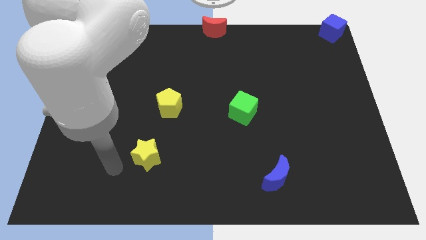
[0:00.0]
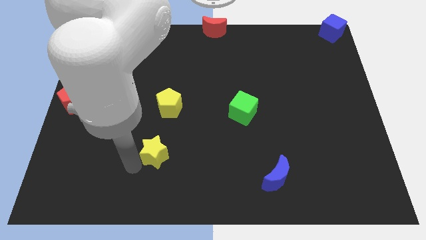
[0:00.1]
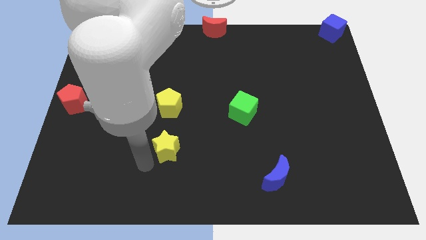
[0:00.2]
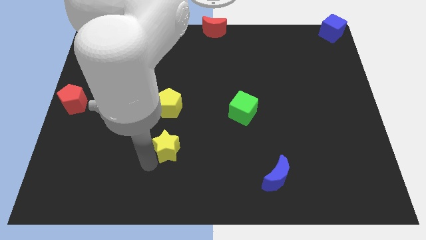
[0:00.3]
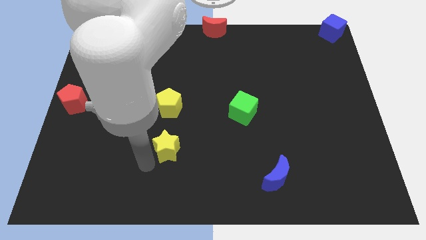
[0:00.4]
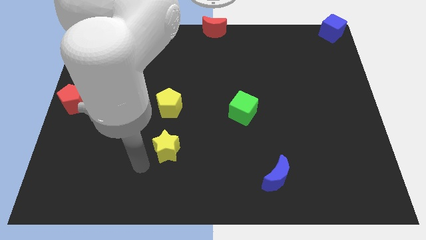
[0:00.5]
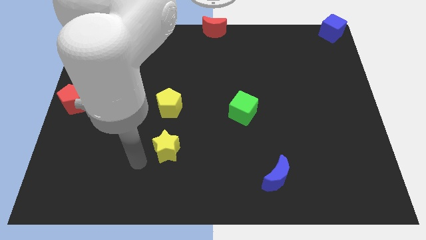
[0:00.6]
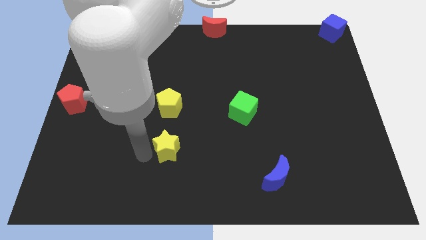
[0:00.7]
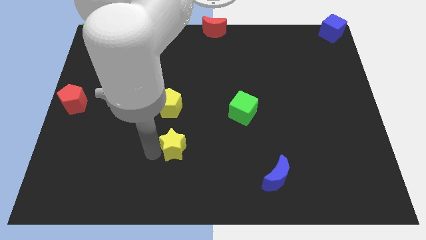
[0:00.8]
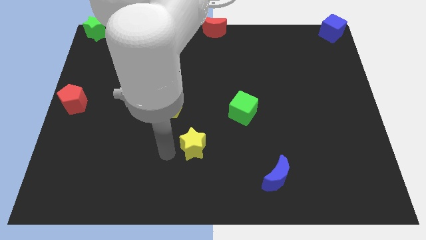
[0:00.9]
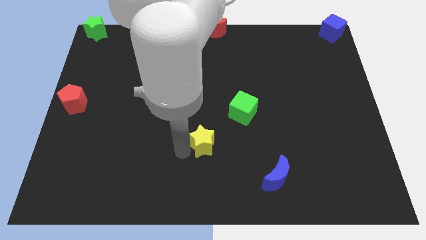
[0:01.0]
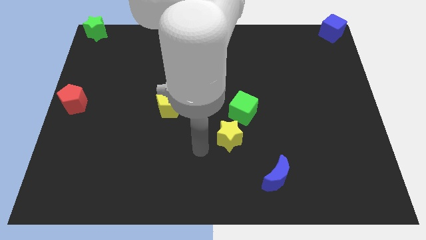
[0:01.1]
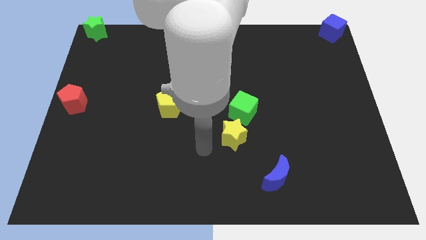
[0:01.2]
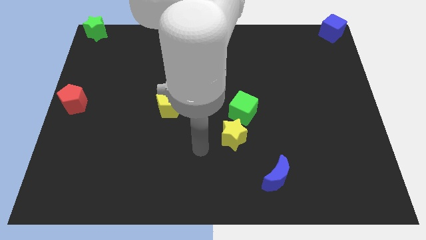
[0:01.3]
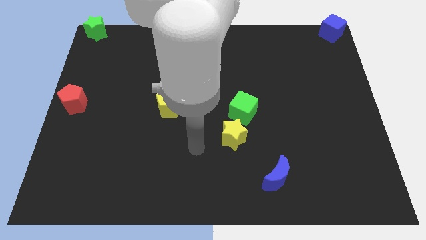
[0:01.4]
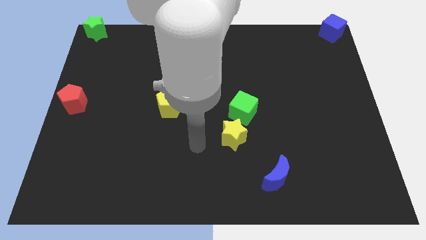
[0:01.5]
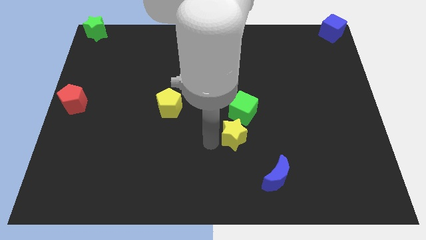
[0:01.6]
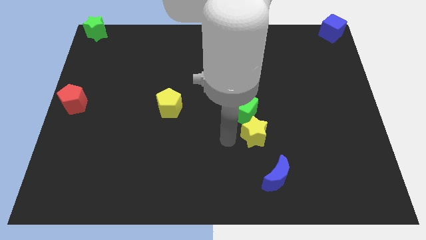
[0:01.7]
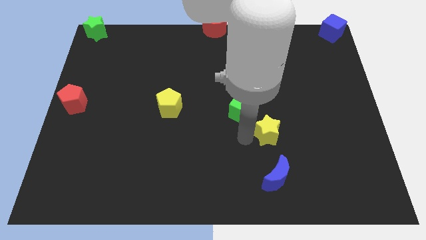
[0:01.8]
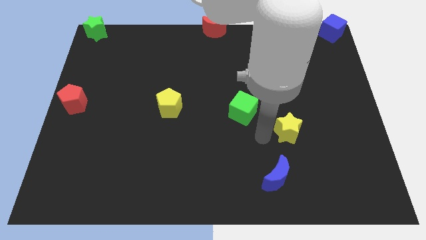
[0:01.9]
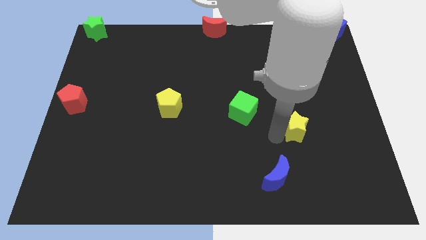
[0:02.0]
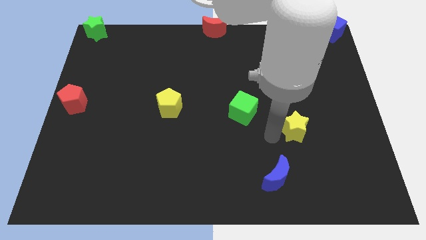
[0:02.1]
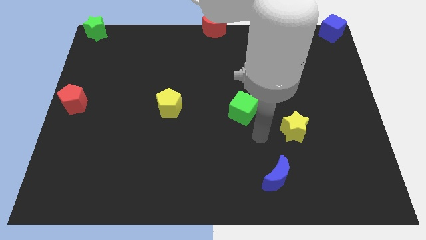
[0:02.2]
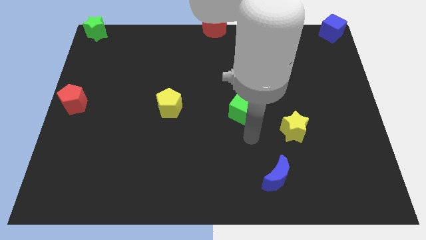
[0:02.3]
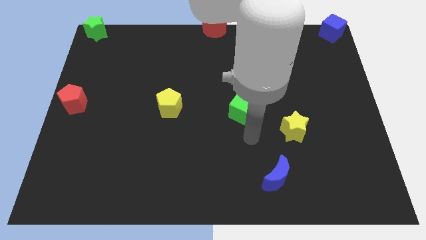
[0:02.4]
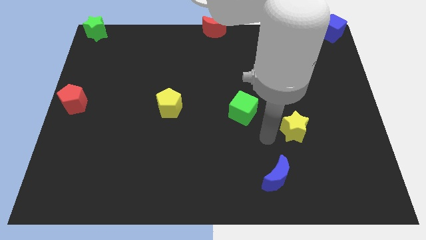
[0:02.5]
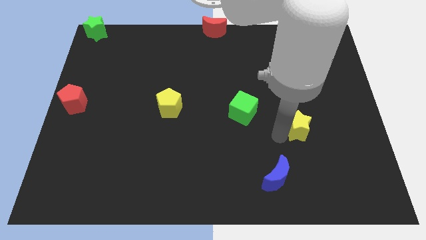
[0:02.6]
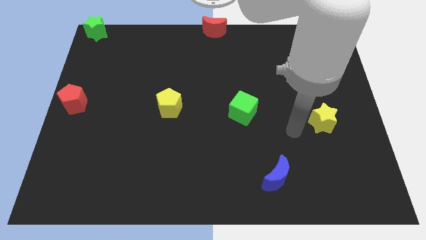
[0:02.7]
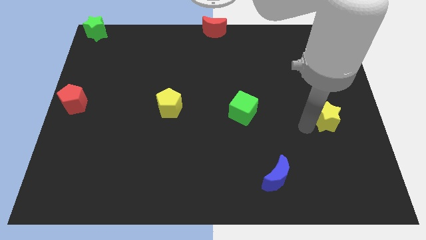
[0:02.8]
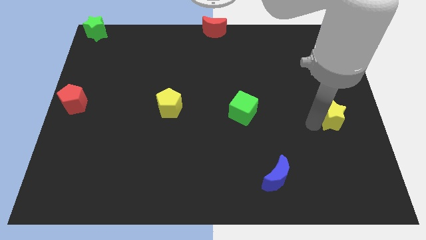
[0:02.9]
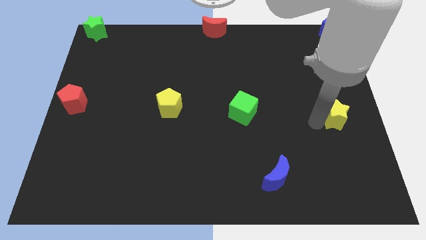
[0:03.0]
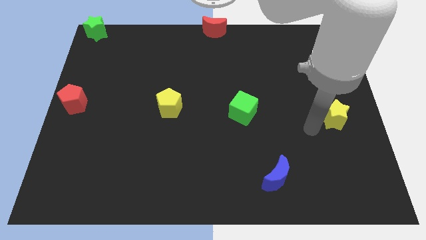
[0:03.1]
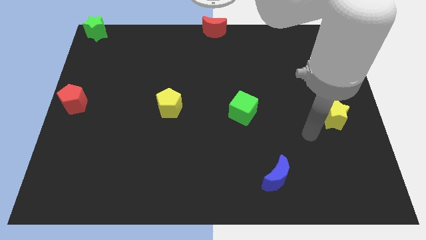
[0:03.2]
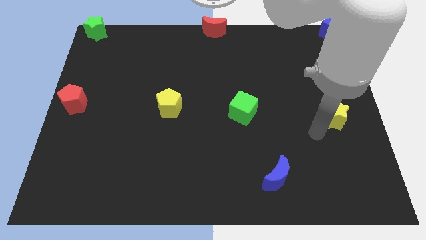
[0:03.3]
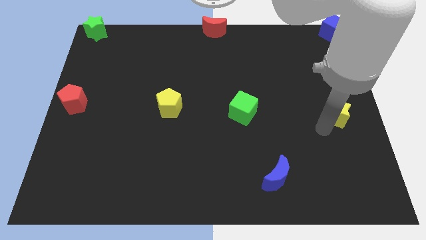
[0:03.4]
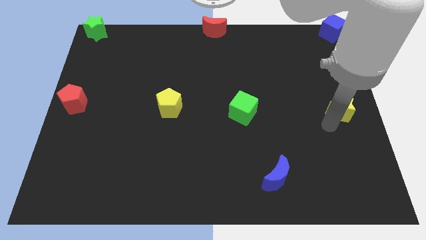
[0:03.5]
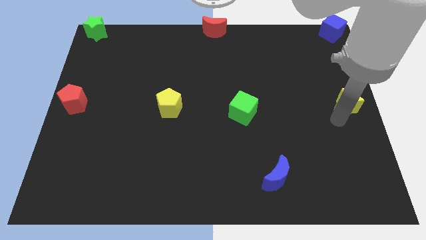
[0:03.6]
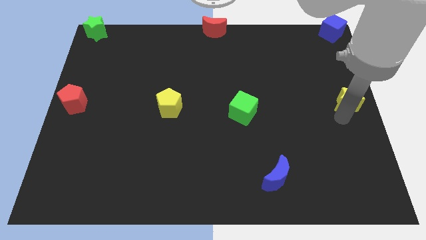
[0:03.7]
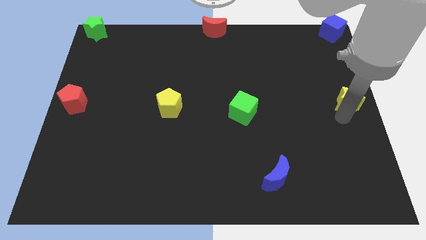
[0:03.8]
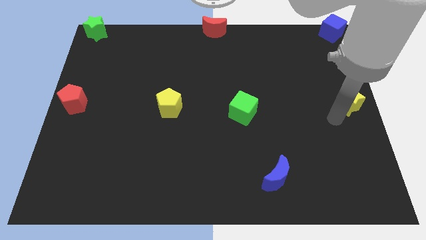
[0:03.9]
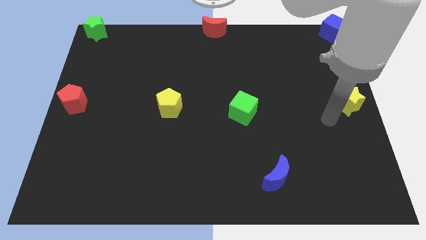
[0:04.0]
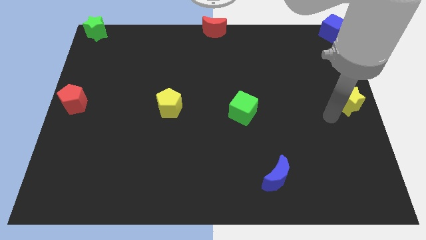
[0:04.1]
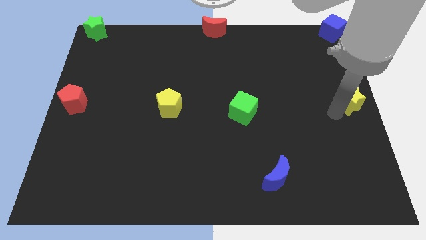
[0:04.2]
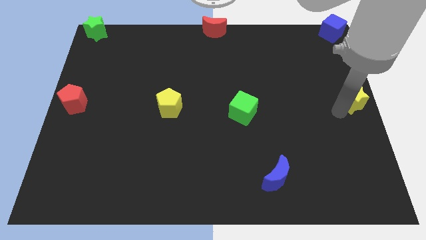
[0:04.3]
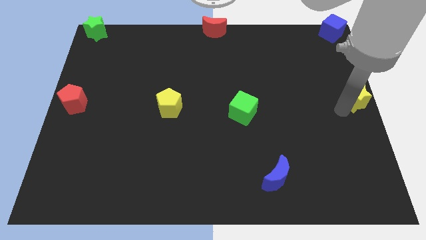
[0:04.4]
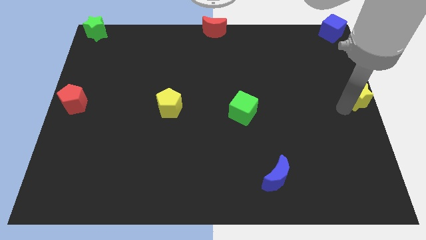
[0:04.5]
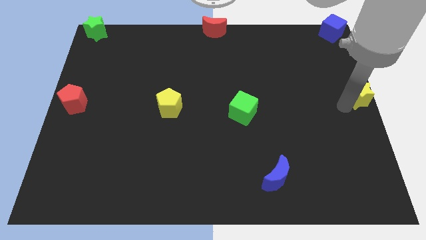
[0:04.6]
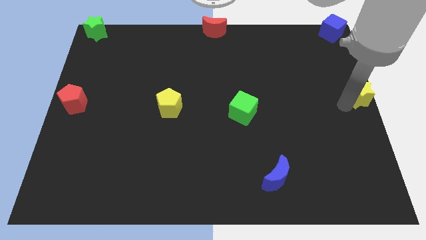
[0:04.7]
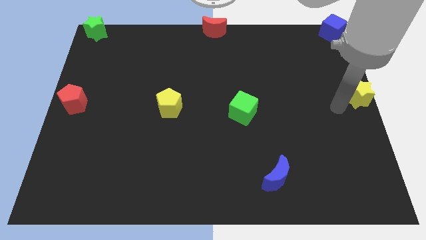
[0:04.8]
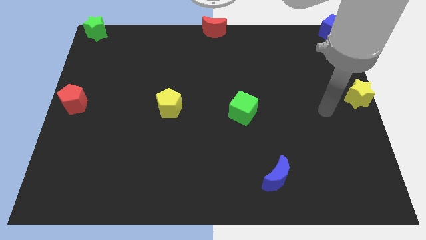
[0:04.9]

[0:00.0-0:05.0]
move the yellow star to the right center of the board

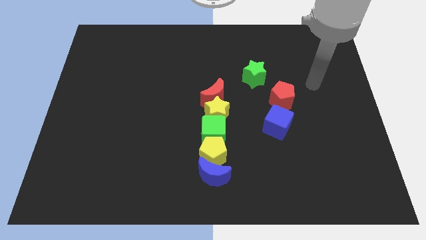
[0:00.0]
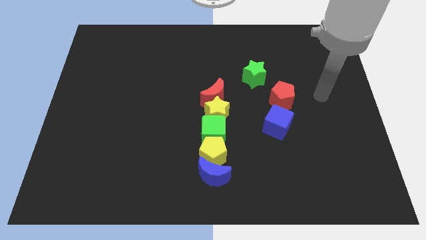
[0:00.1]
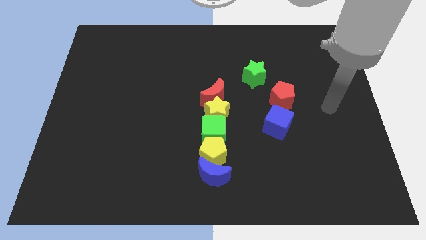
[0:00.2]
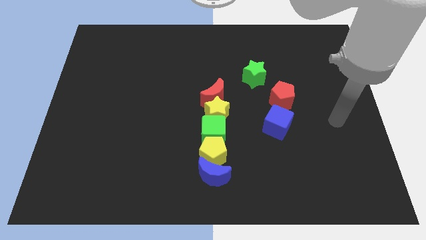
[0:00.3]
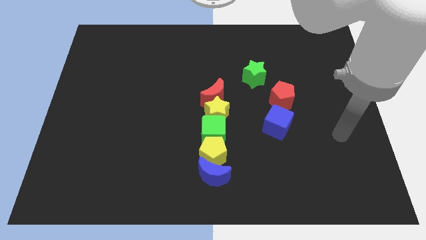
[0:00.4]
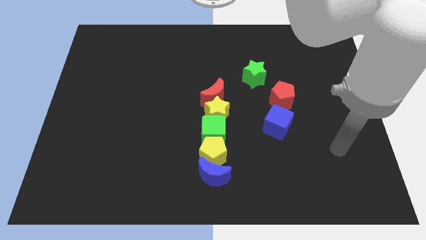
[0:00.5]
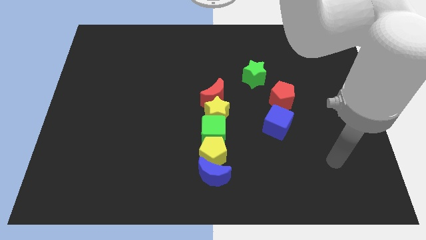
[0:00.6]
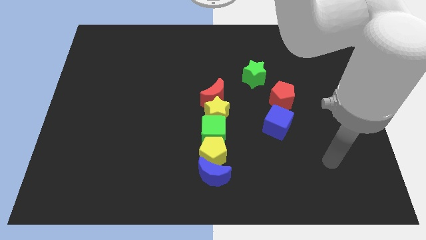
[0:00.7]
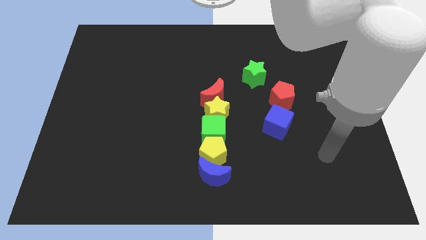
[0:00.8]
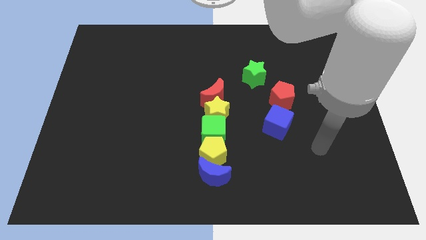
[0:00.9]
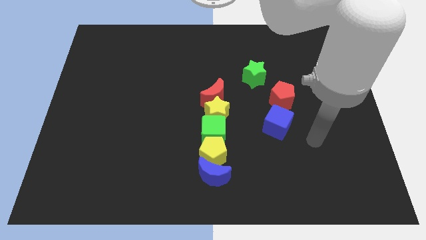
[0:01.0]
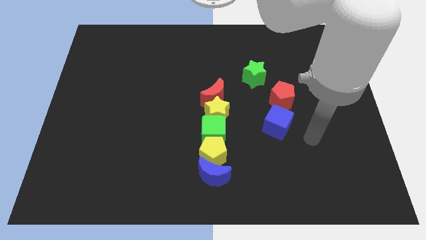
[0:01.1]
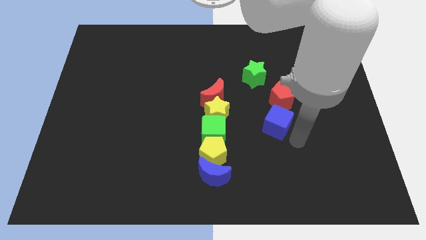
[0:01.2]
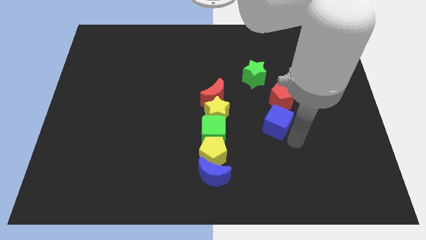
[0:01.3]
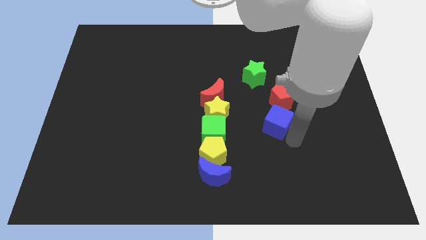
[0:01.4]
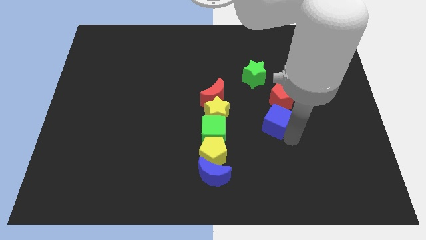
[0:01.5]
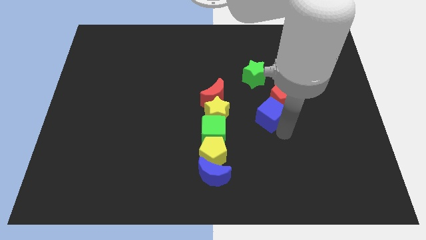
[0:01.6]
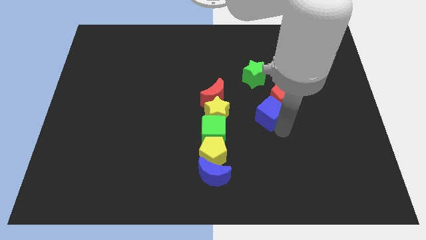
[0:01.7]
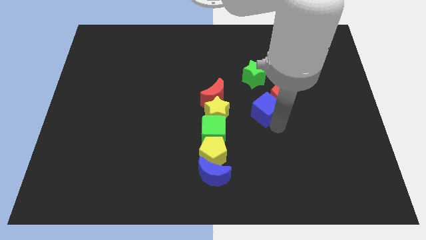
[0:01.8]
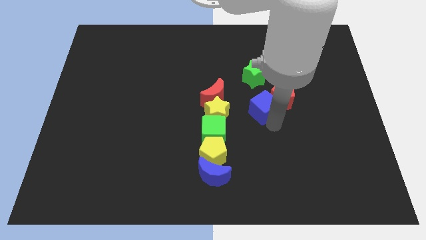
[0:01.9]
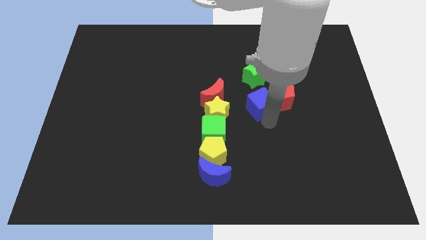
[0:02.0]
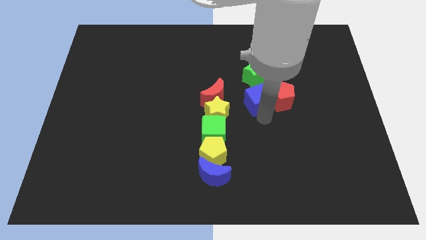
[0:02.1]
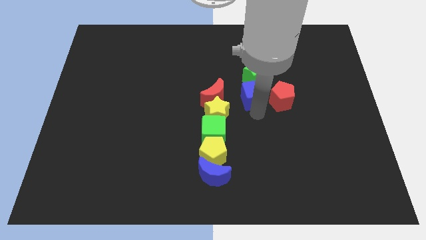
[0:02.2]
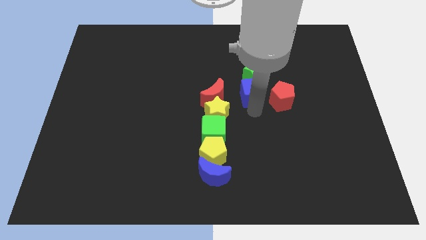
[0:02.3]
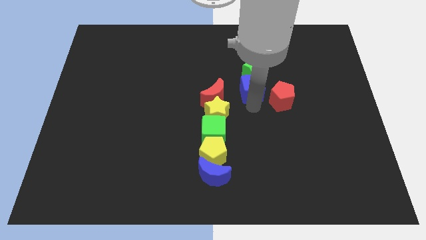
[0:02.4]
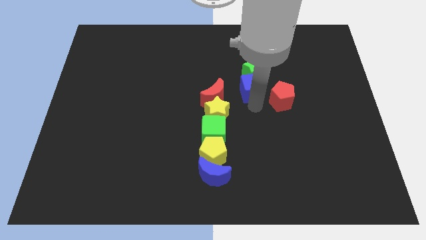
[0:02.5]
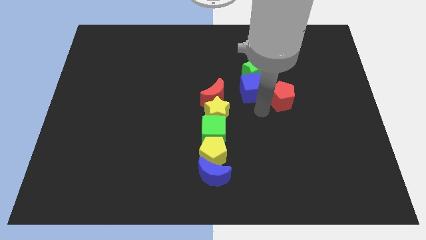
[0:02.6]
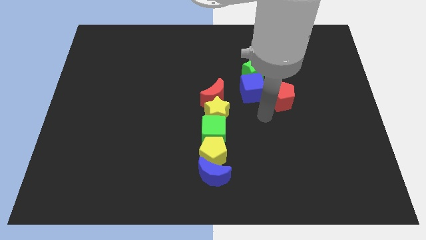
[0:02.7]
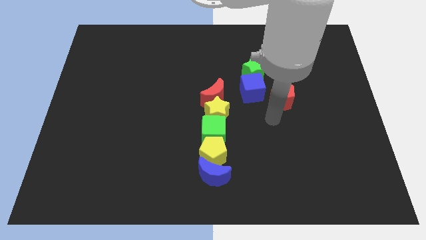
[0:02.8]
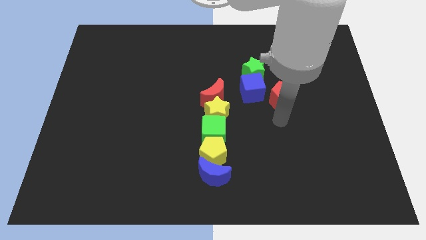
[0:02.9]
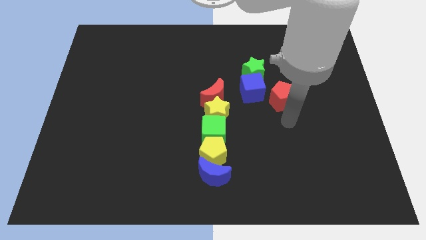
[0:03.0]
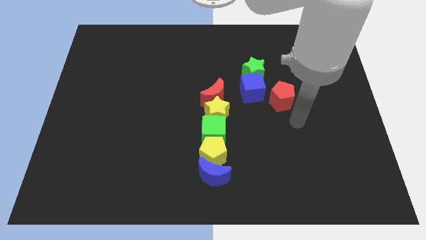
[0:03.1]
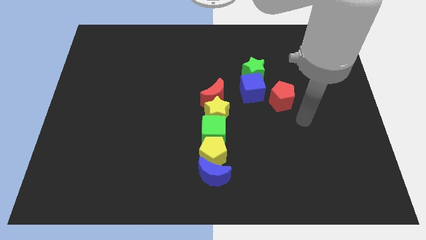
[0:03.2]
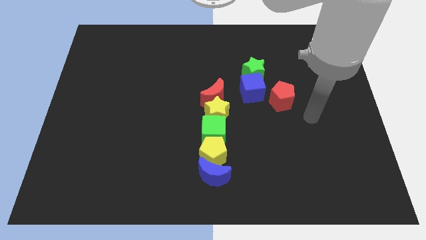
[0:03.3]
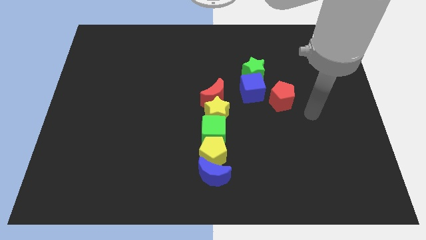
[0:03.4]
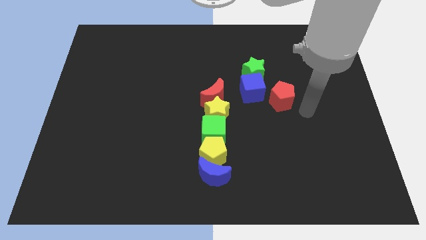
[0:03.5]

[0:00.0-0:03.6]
push the blue cube down to the green star

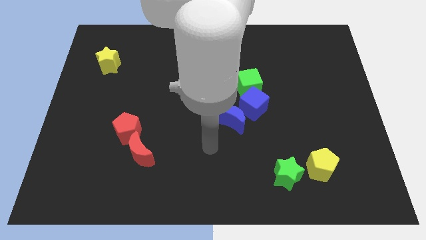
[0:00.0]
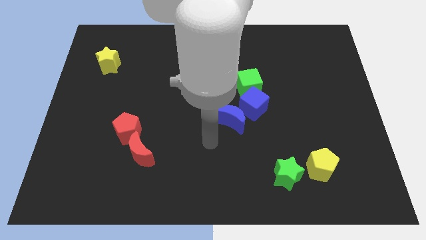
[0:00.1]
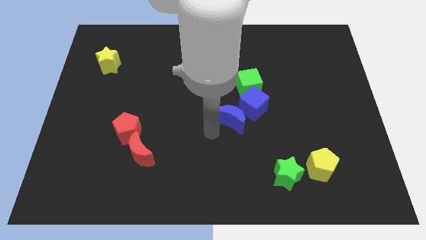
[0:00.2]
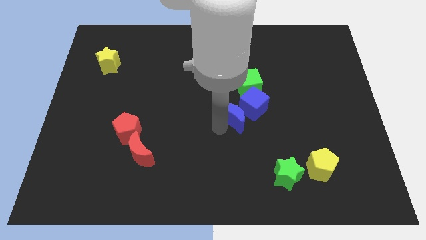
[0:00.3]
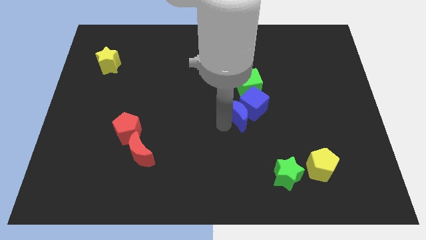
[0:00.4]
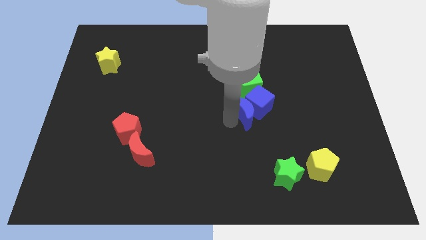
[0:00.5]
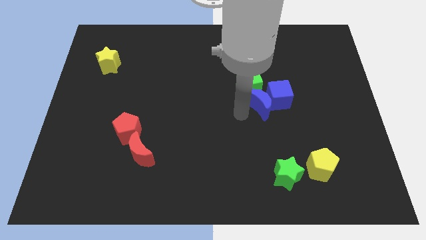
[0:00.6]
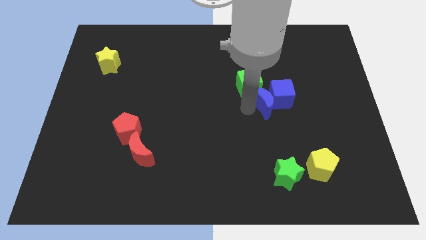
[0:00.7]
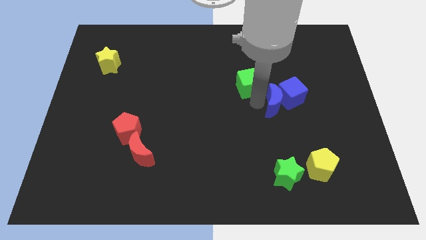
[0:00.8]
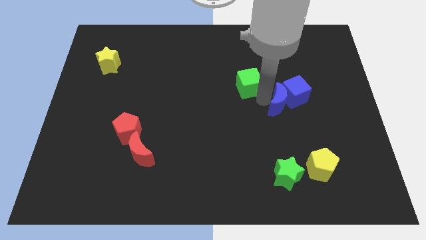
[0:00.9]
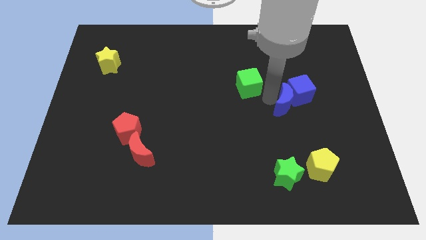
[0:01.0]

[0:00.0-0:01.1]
push the blue blocks towards the center right
